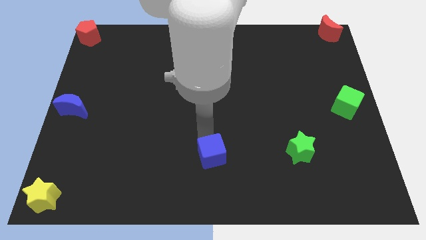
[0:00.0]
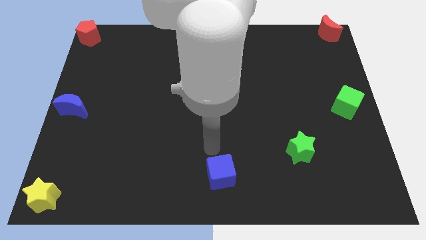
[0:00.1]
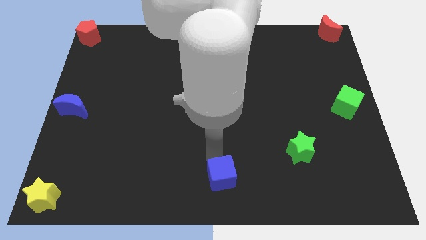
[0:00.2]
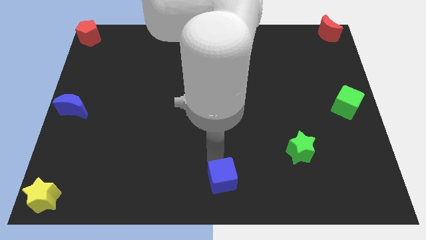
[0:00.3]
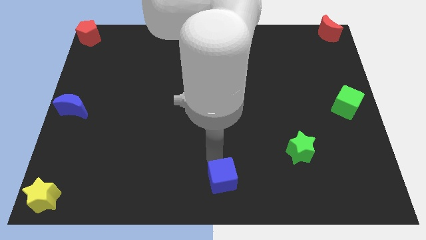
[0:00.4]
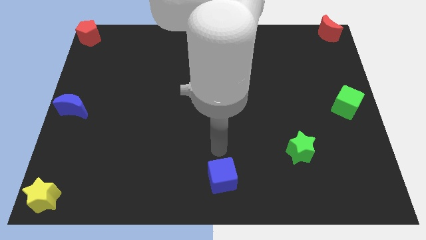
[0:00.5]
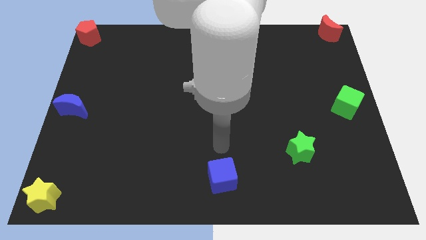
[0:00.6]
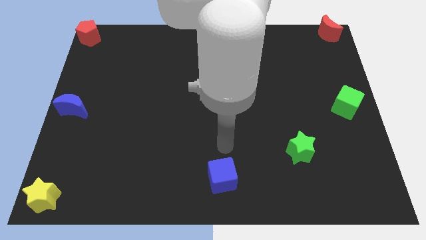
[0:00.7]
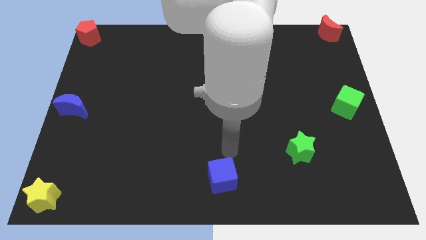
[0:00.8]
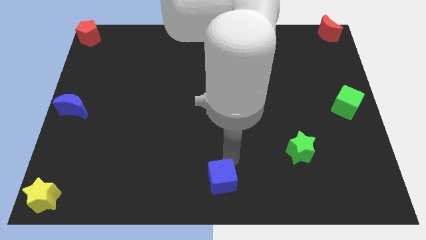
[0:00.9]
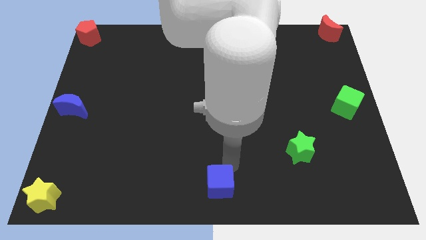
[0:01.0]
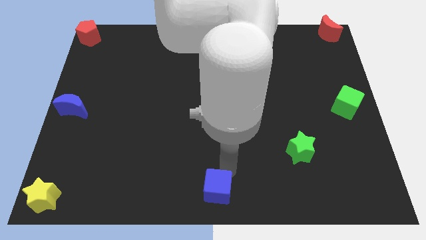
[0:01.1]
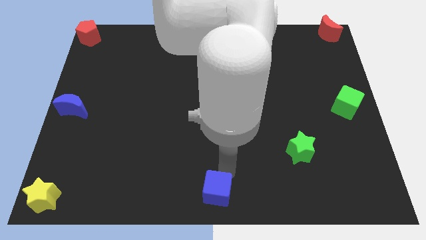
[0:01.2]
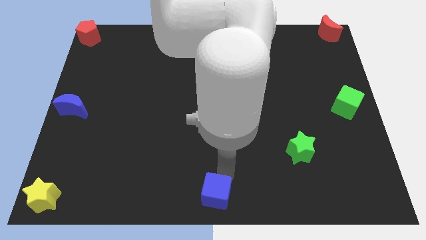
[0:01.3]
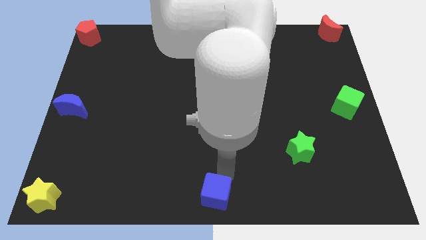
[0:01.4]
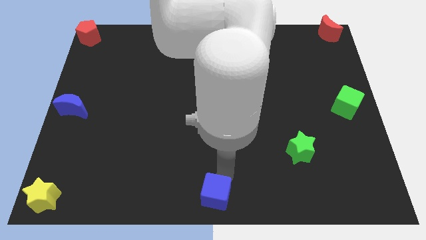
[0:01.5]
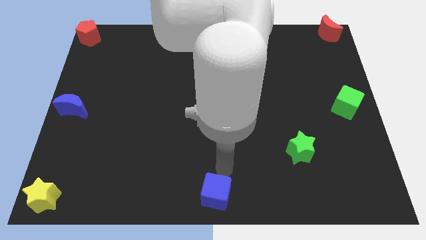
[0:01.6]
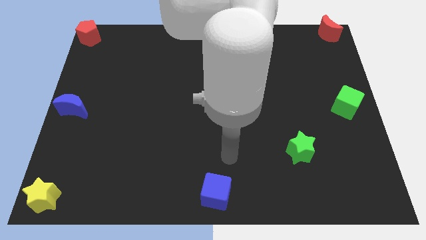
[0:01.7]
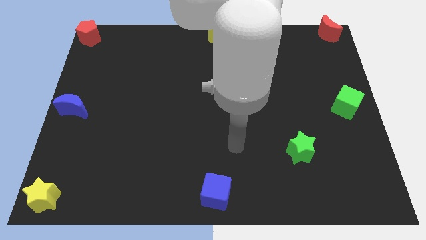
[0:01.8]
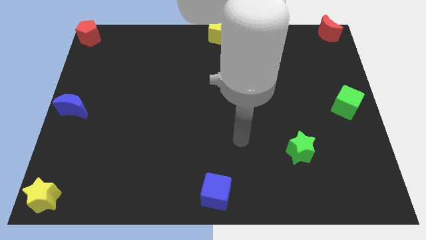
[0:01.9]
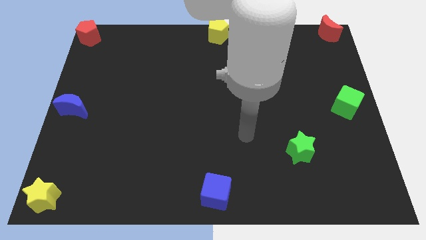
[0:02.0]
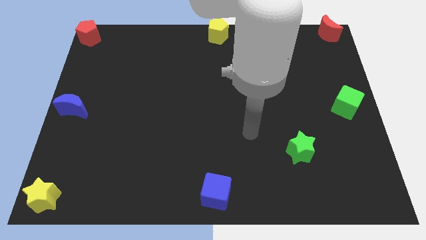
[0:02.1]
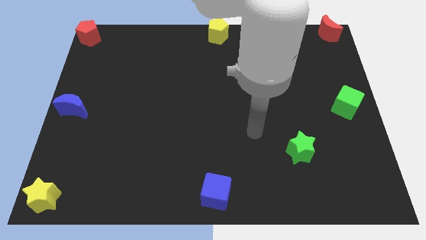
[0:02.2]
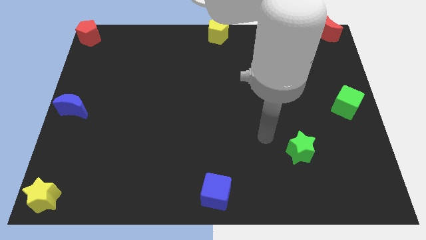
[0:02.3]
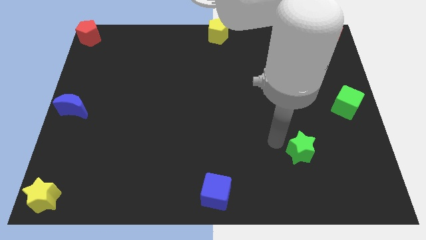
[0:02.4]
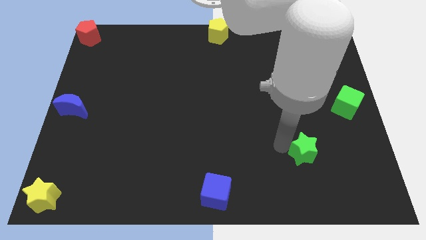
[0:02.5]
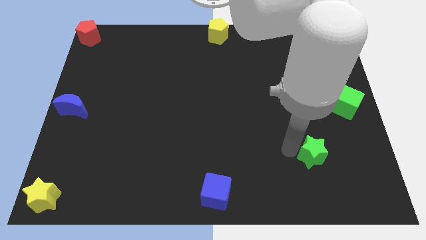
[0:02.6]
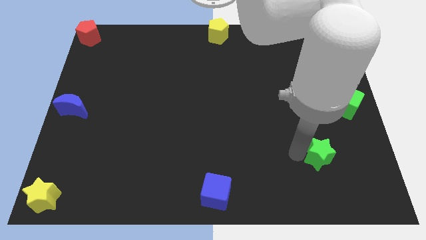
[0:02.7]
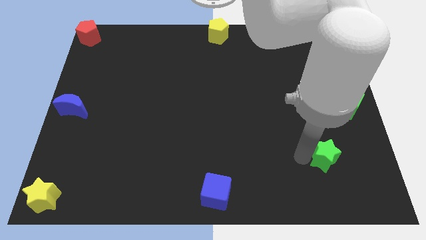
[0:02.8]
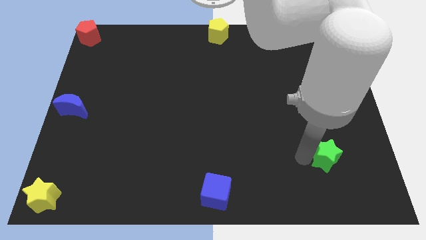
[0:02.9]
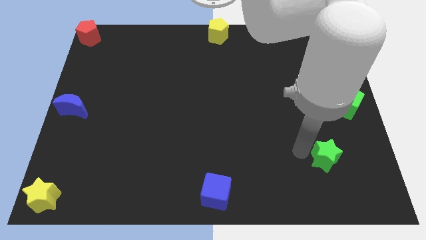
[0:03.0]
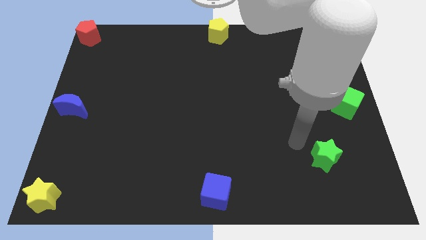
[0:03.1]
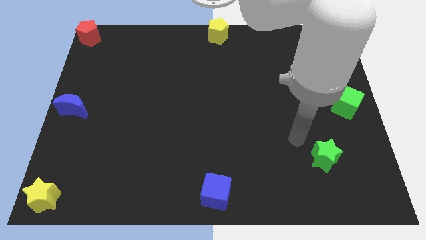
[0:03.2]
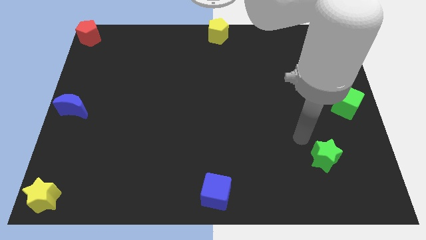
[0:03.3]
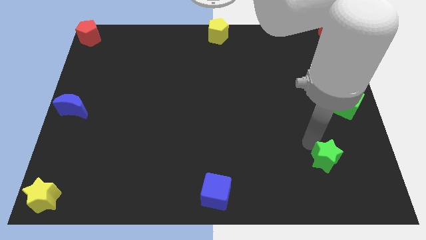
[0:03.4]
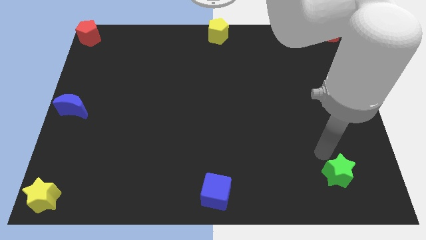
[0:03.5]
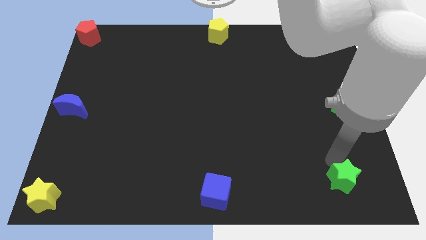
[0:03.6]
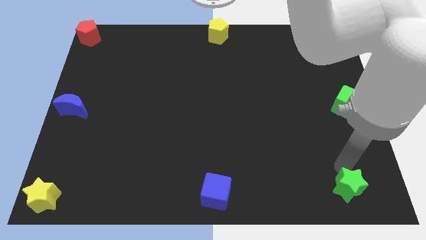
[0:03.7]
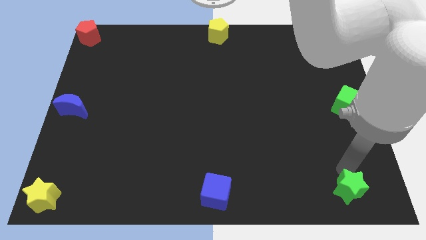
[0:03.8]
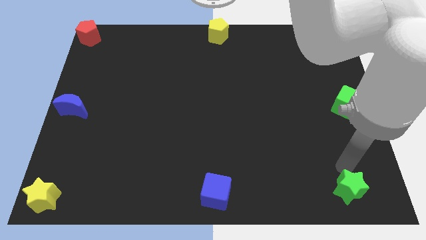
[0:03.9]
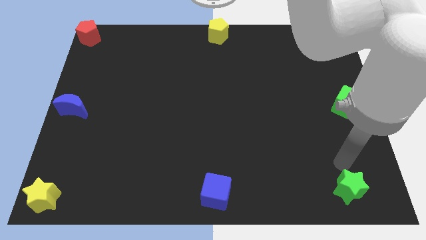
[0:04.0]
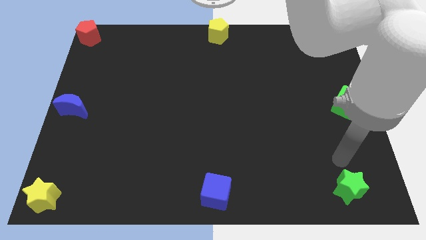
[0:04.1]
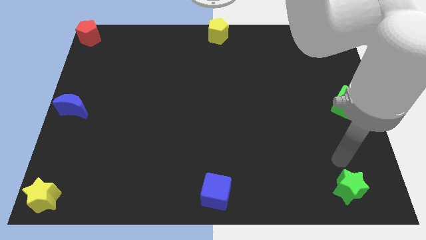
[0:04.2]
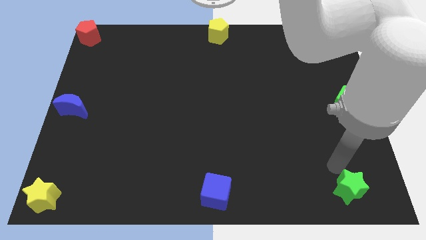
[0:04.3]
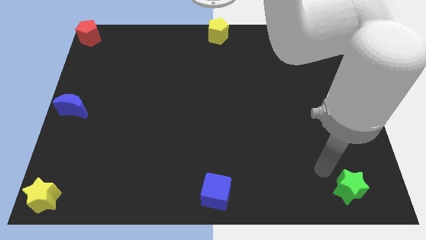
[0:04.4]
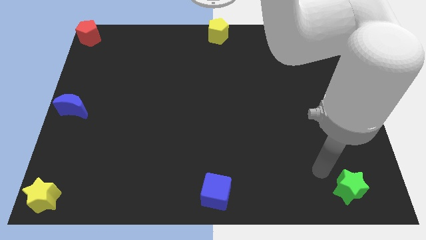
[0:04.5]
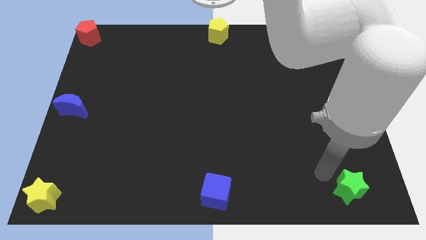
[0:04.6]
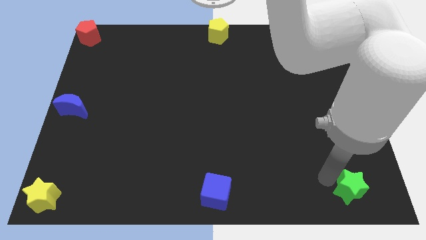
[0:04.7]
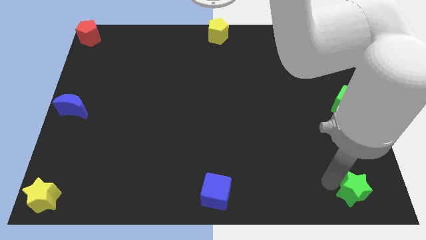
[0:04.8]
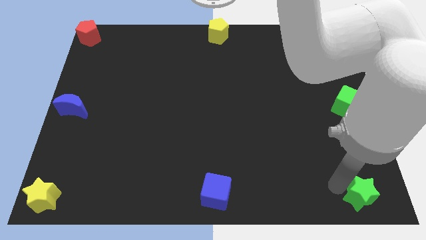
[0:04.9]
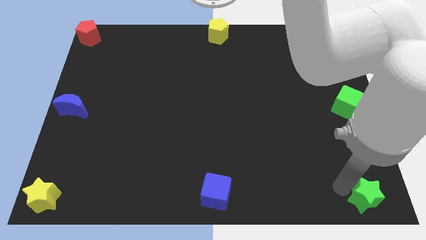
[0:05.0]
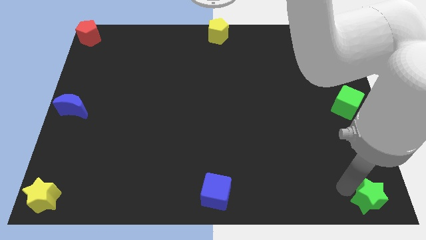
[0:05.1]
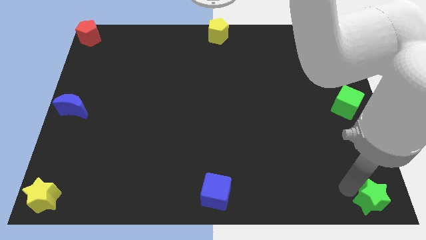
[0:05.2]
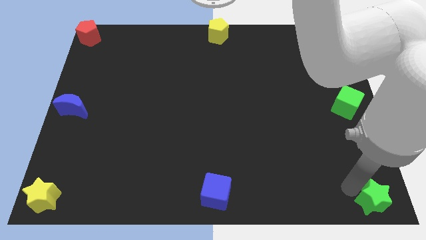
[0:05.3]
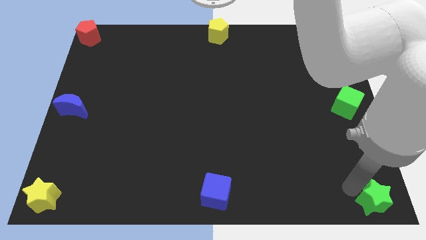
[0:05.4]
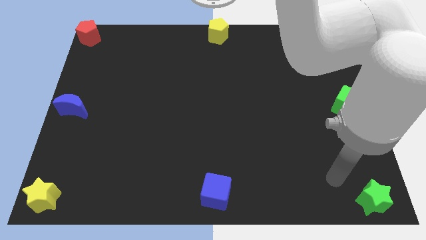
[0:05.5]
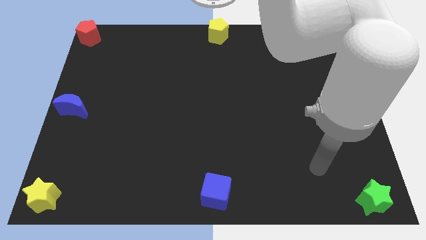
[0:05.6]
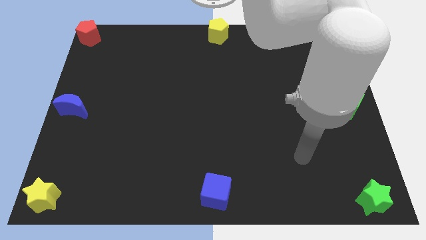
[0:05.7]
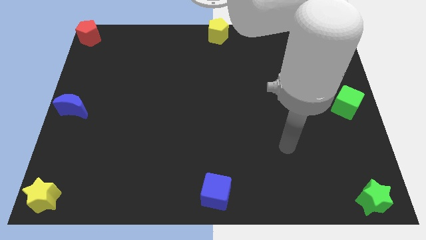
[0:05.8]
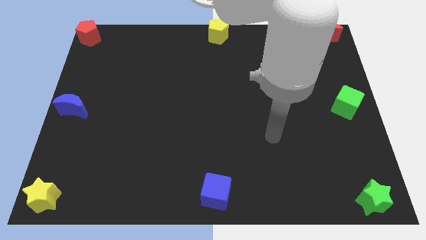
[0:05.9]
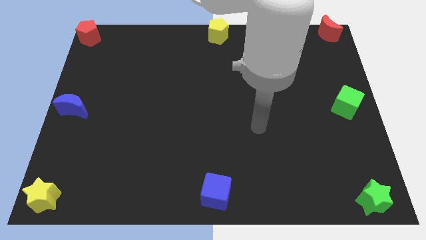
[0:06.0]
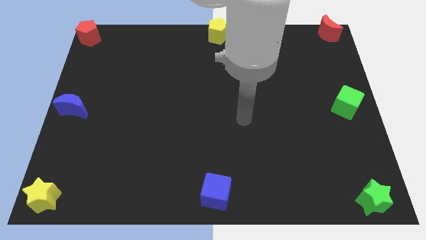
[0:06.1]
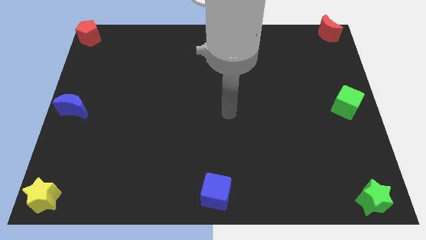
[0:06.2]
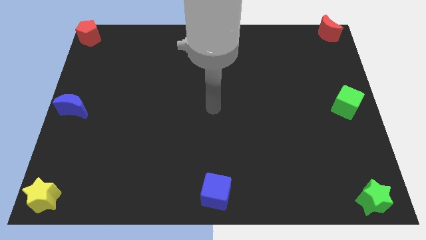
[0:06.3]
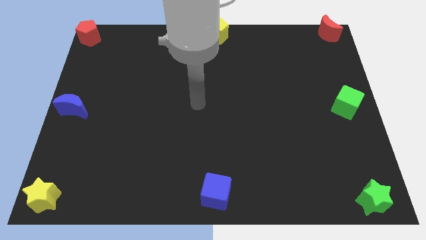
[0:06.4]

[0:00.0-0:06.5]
push the green star to the bottom right of the board

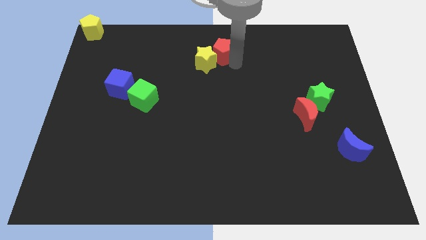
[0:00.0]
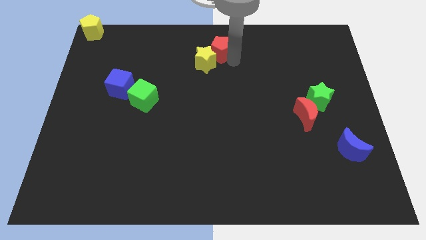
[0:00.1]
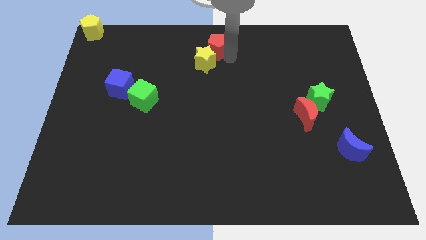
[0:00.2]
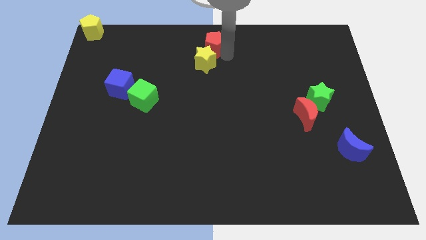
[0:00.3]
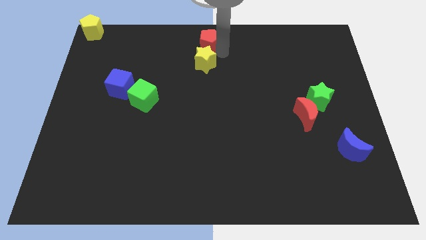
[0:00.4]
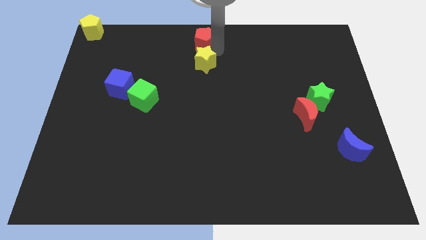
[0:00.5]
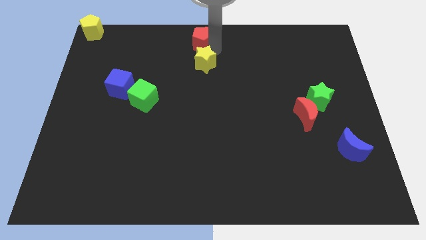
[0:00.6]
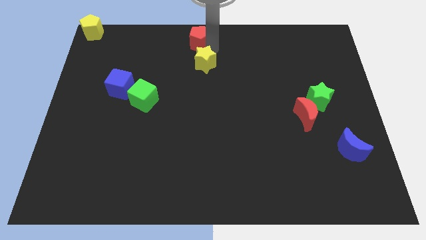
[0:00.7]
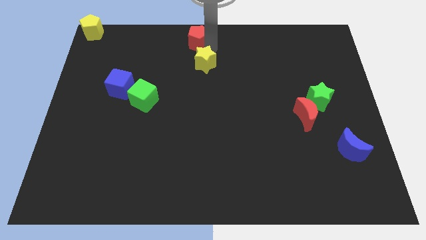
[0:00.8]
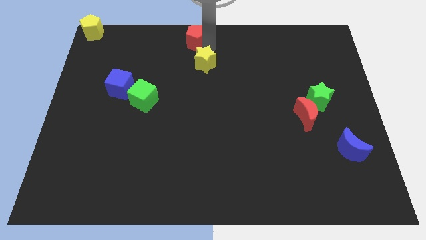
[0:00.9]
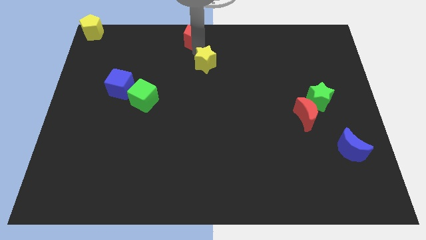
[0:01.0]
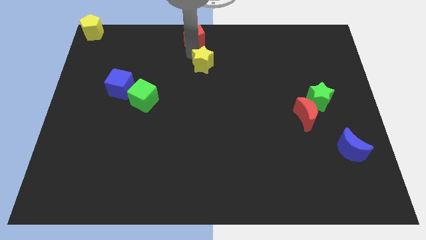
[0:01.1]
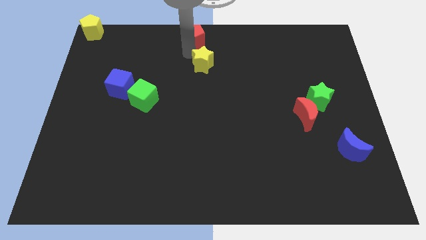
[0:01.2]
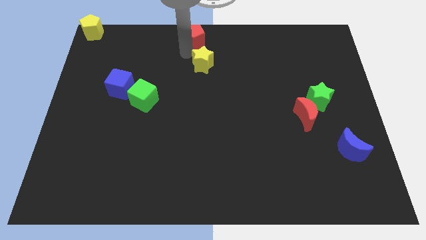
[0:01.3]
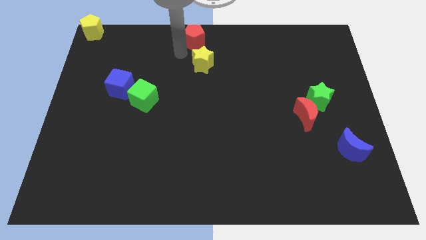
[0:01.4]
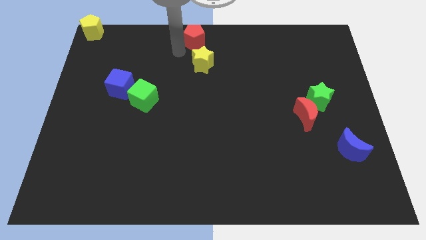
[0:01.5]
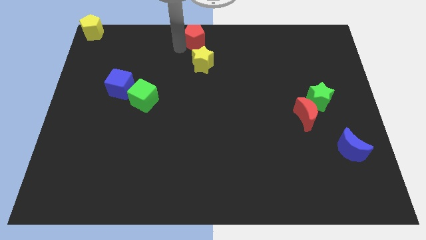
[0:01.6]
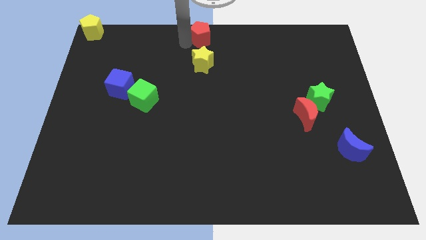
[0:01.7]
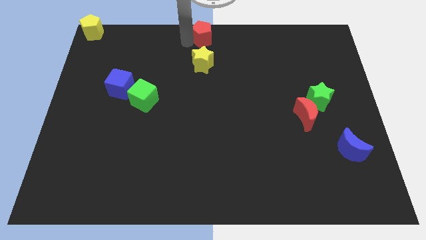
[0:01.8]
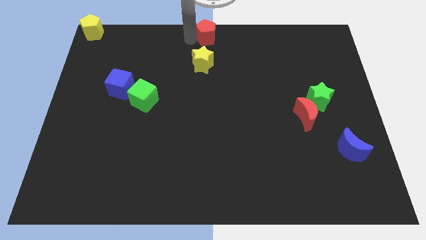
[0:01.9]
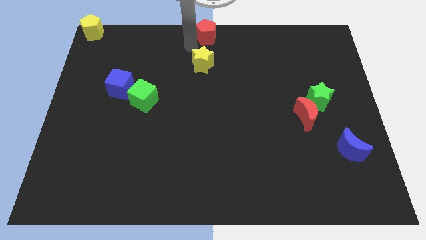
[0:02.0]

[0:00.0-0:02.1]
move the red pentagon to the top center of the table

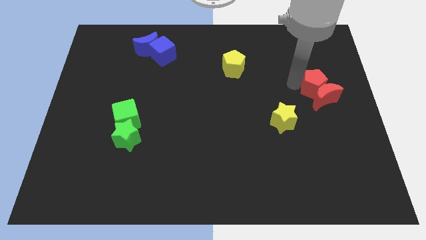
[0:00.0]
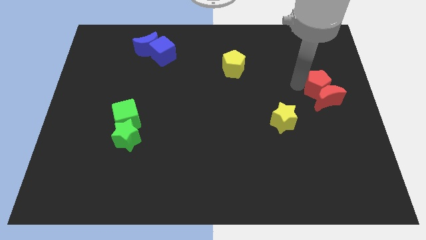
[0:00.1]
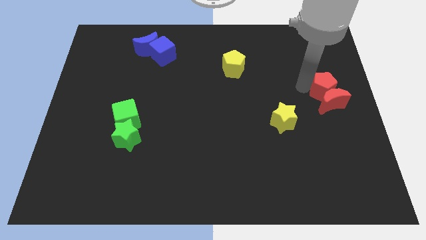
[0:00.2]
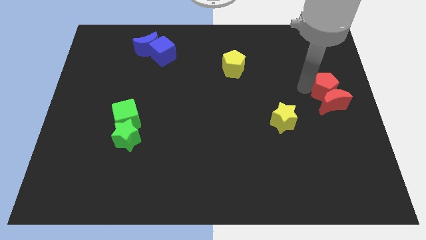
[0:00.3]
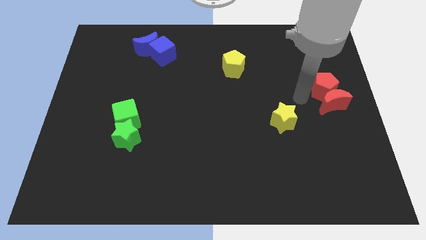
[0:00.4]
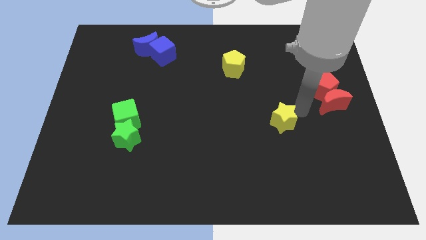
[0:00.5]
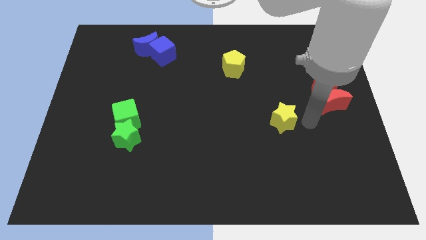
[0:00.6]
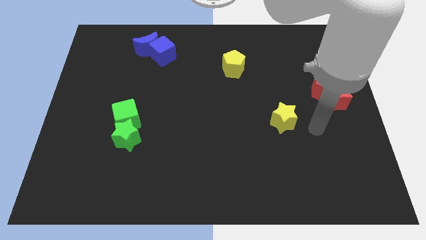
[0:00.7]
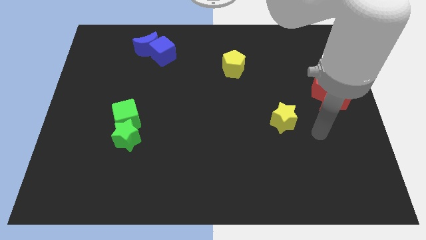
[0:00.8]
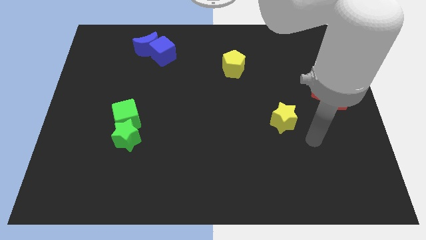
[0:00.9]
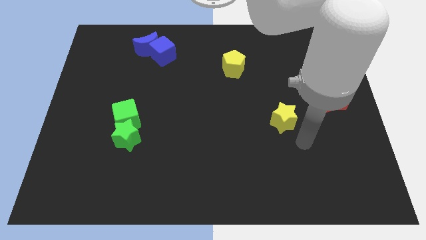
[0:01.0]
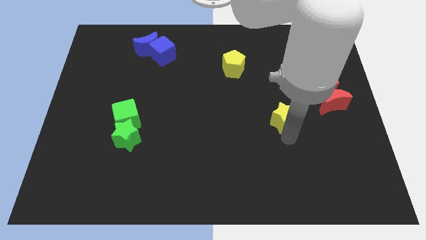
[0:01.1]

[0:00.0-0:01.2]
move your arm away from the red pentagon
